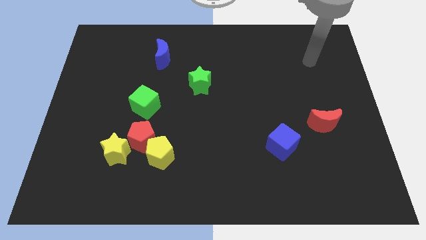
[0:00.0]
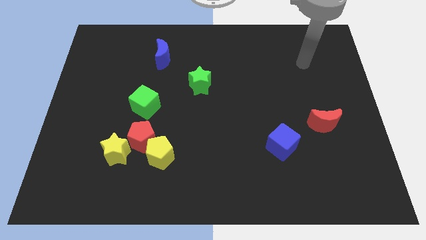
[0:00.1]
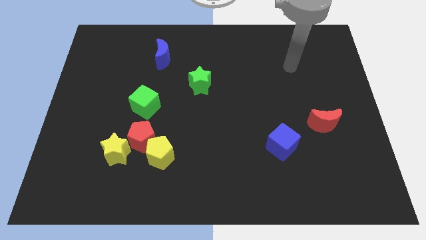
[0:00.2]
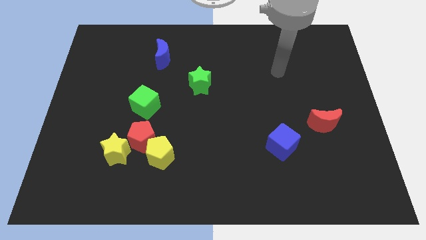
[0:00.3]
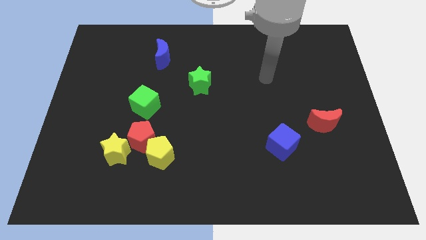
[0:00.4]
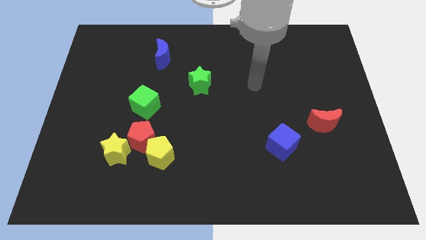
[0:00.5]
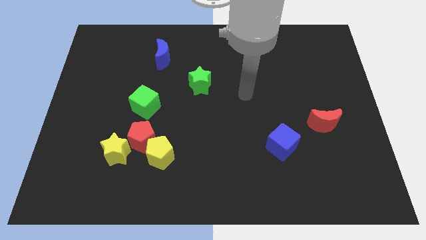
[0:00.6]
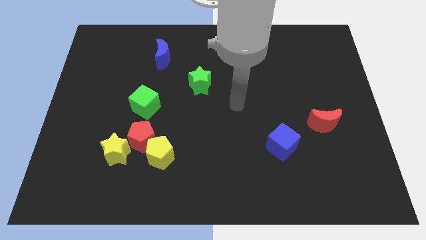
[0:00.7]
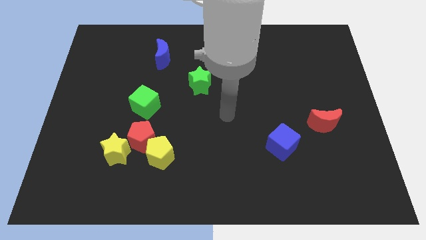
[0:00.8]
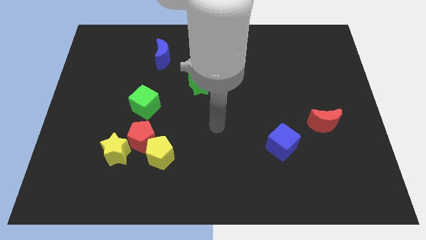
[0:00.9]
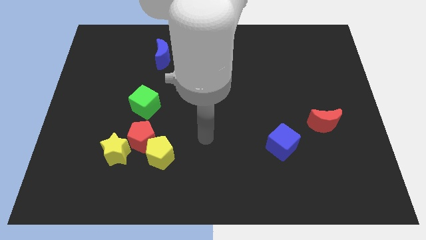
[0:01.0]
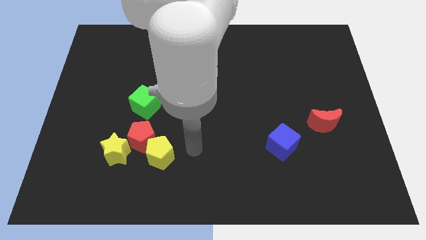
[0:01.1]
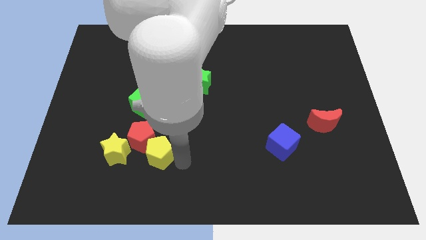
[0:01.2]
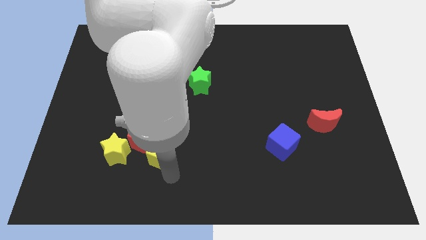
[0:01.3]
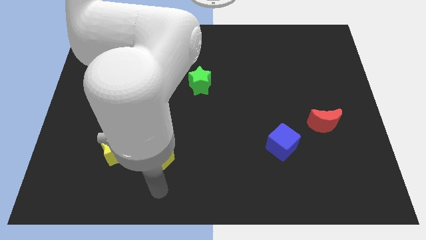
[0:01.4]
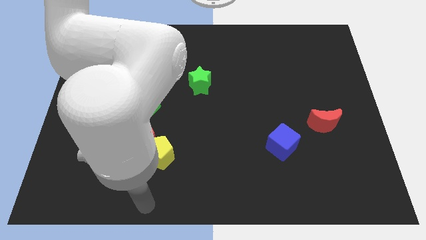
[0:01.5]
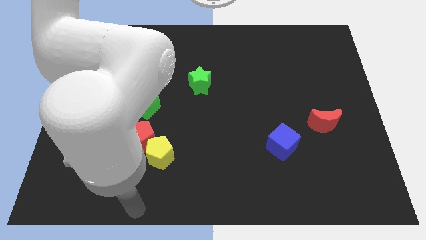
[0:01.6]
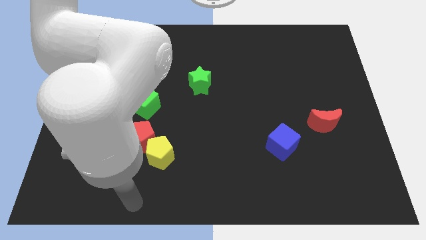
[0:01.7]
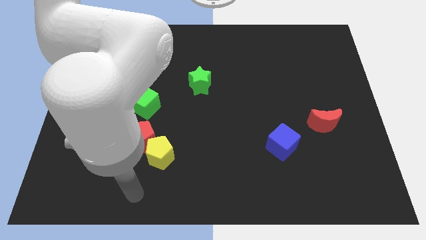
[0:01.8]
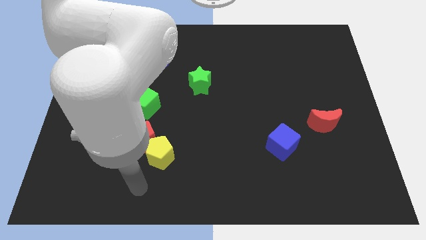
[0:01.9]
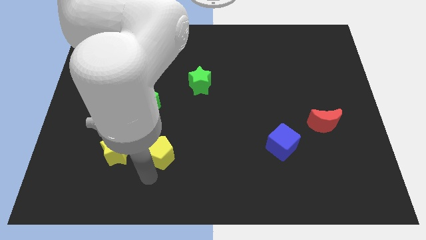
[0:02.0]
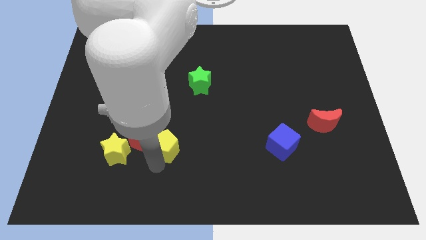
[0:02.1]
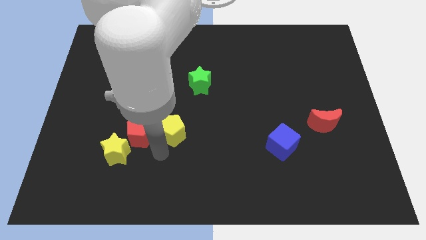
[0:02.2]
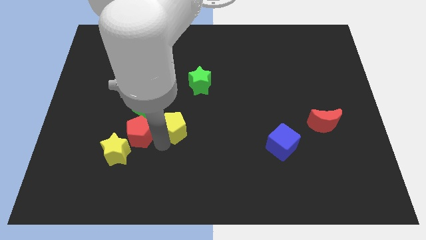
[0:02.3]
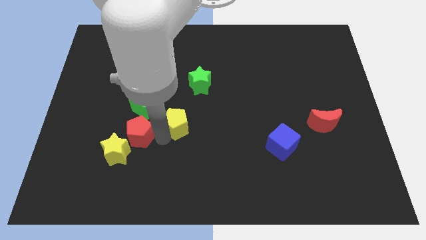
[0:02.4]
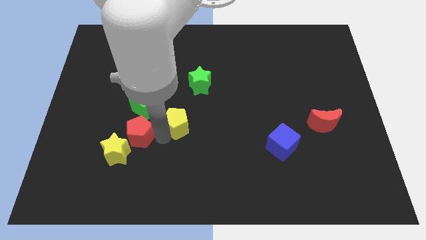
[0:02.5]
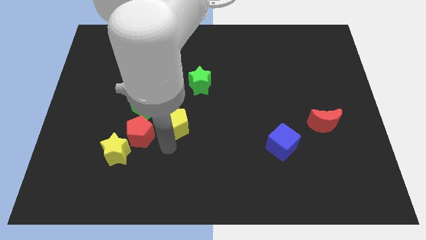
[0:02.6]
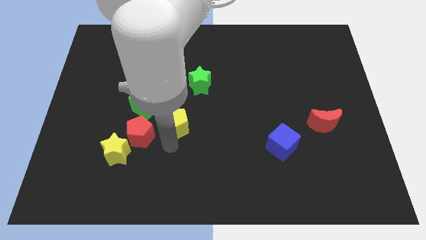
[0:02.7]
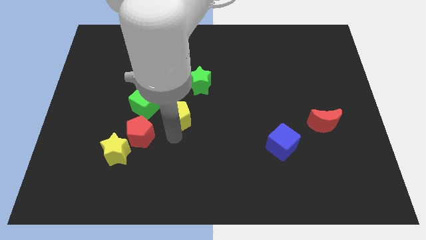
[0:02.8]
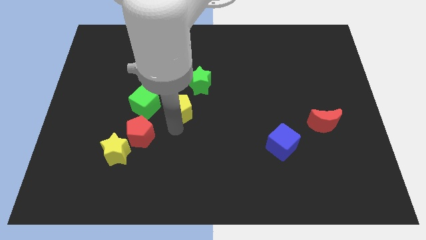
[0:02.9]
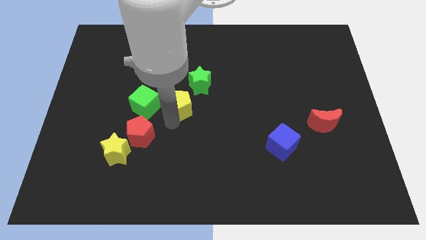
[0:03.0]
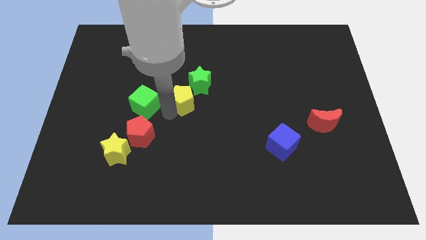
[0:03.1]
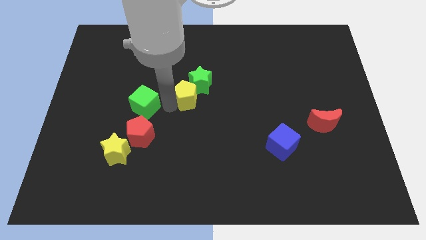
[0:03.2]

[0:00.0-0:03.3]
drag the yellow pentagon close to the green star

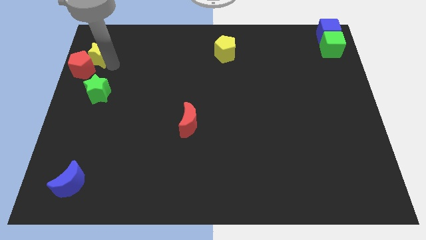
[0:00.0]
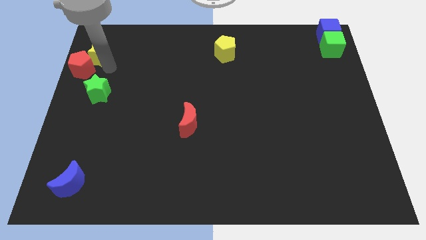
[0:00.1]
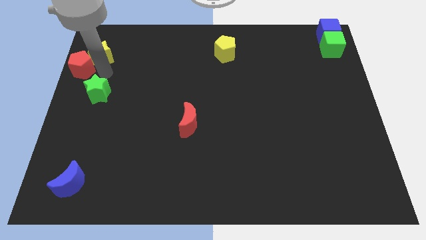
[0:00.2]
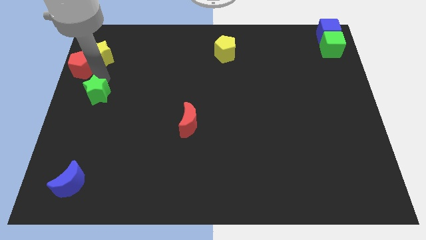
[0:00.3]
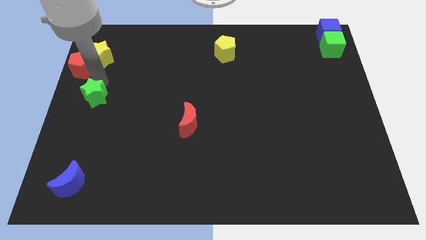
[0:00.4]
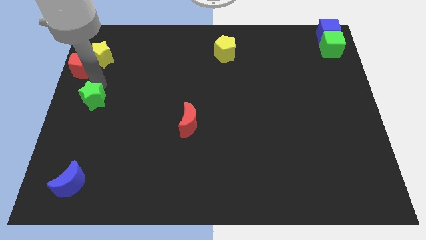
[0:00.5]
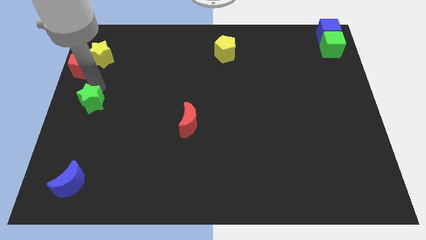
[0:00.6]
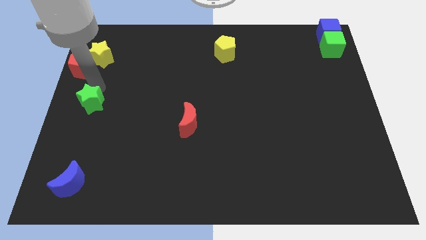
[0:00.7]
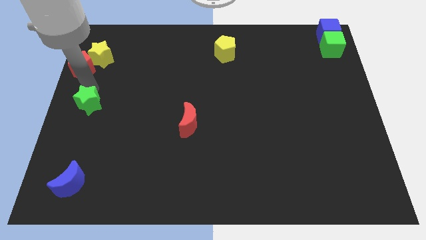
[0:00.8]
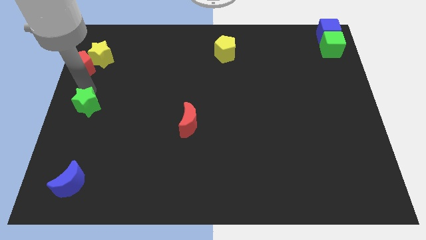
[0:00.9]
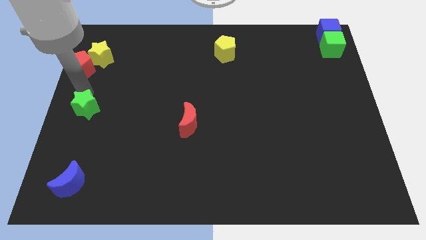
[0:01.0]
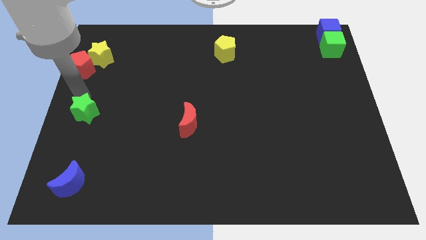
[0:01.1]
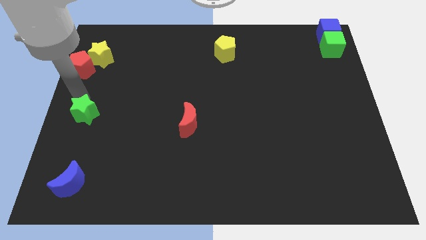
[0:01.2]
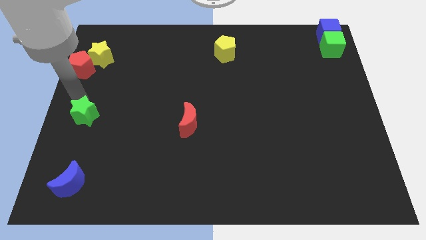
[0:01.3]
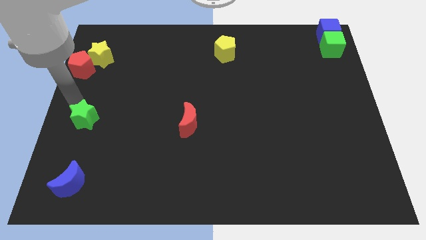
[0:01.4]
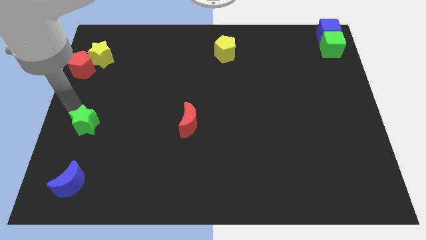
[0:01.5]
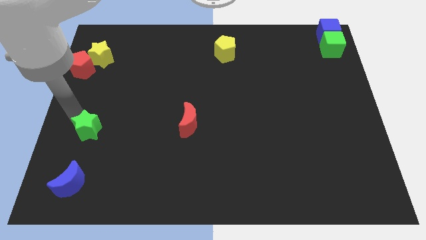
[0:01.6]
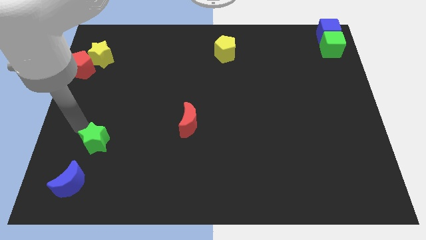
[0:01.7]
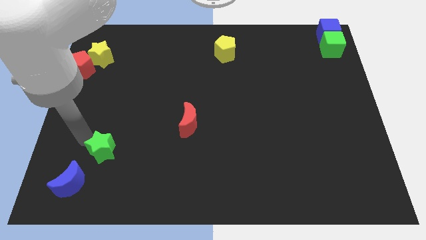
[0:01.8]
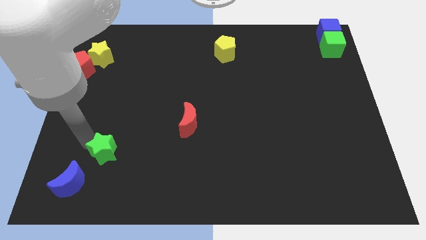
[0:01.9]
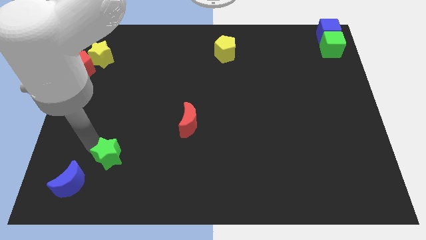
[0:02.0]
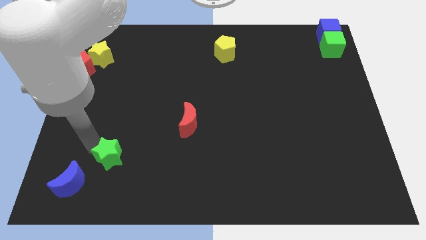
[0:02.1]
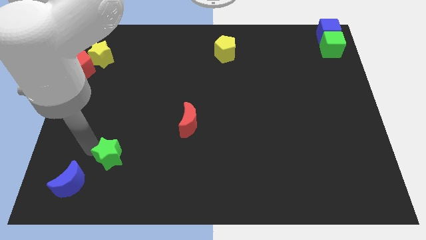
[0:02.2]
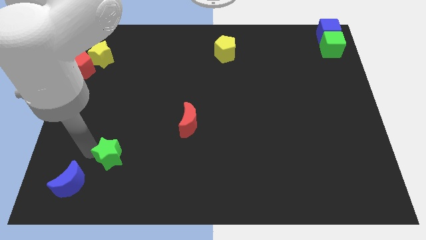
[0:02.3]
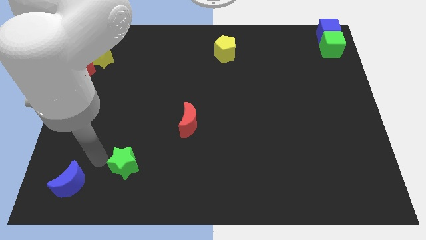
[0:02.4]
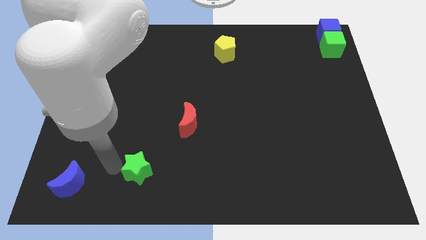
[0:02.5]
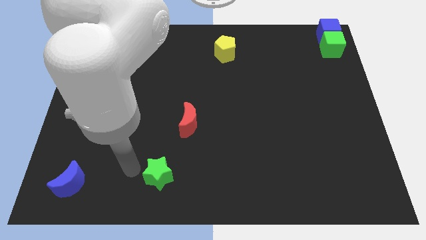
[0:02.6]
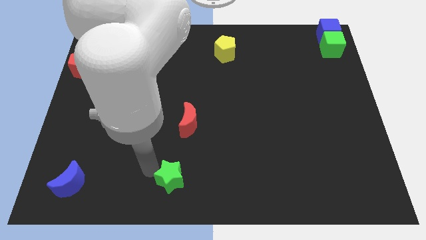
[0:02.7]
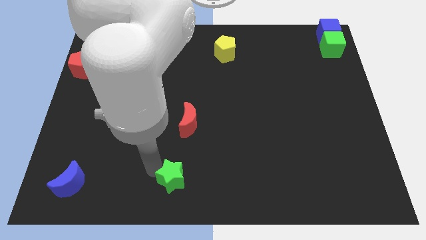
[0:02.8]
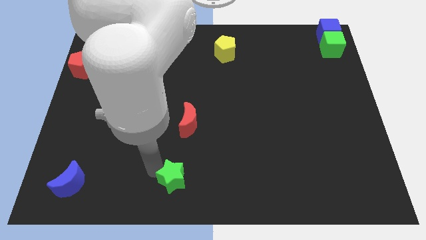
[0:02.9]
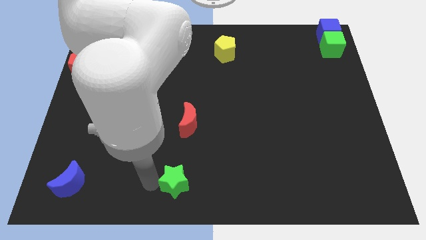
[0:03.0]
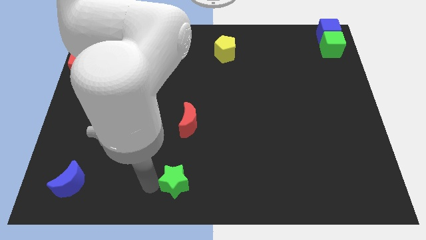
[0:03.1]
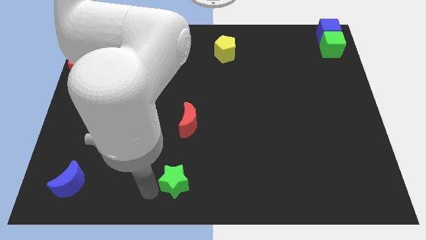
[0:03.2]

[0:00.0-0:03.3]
push the green star towards the bottom center

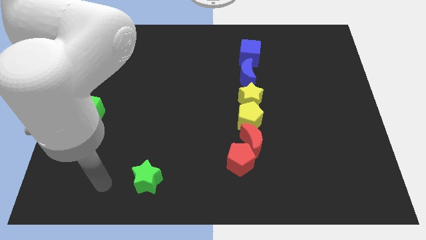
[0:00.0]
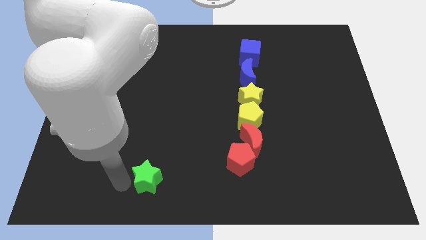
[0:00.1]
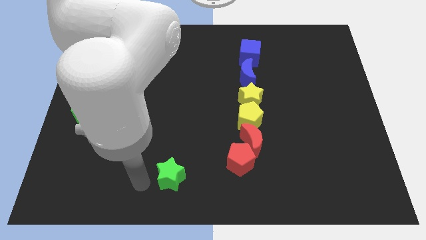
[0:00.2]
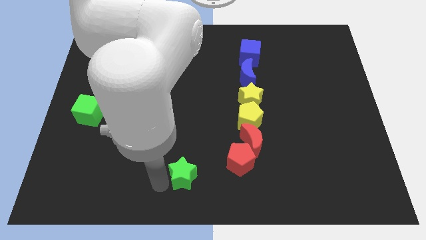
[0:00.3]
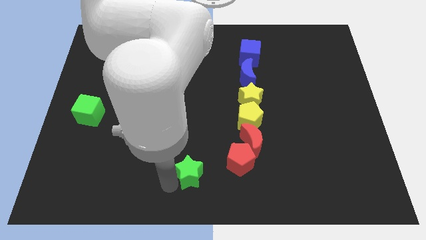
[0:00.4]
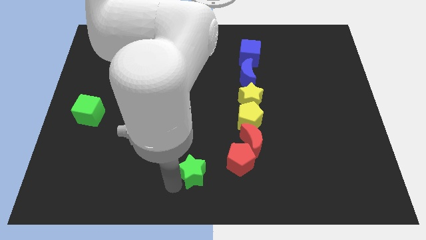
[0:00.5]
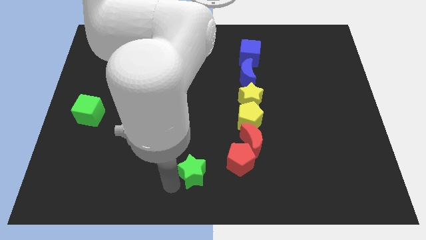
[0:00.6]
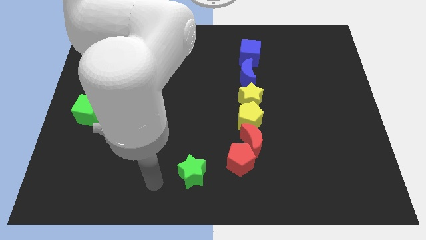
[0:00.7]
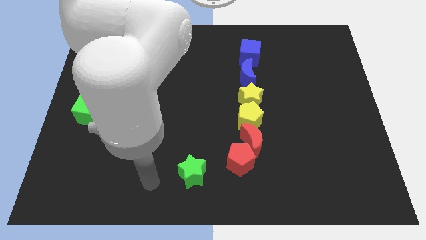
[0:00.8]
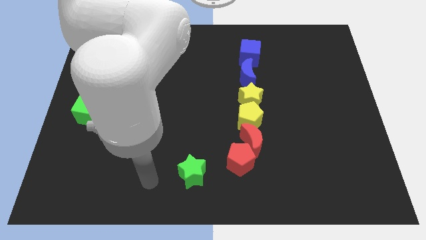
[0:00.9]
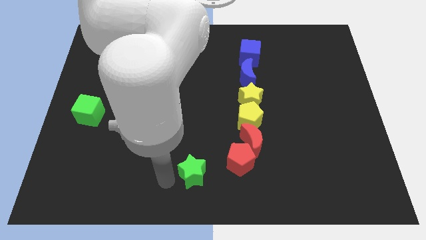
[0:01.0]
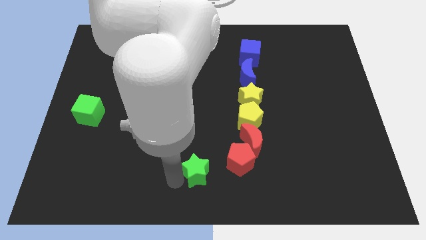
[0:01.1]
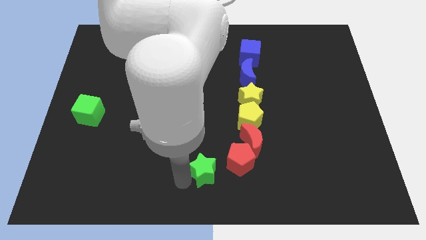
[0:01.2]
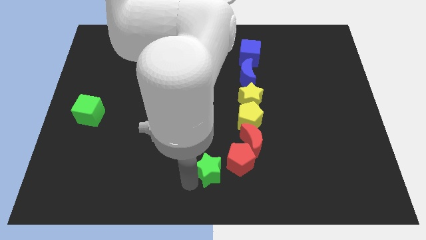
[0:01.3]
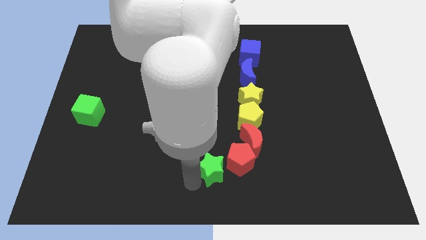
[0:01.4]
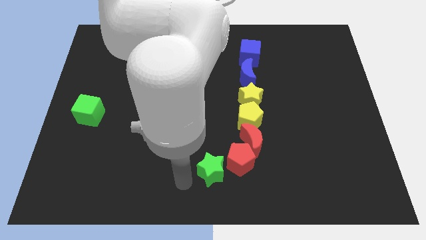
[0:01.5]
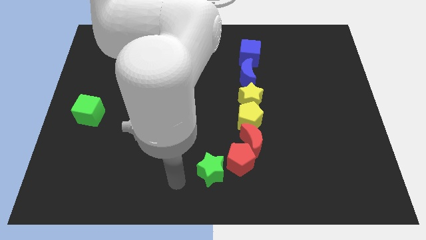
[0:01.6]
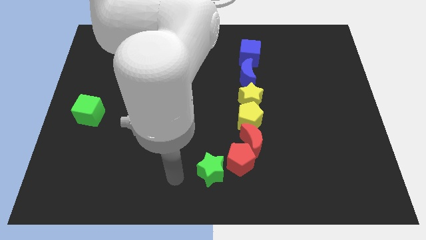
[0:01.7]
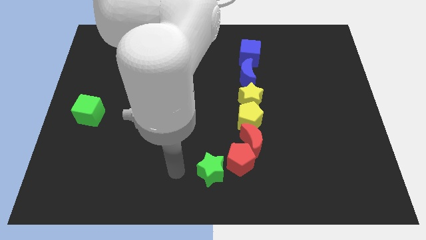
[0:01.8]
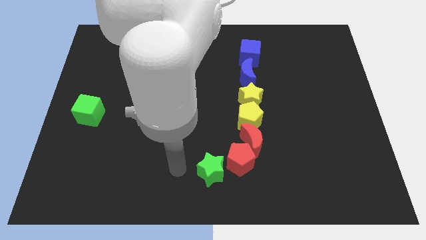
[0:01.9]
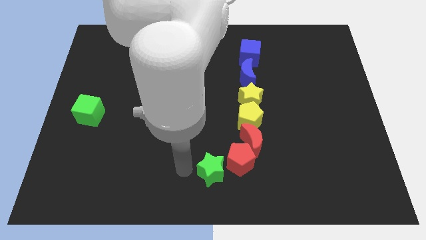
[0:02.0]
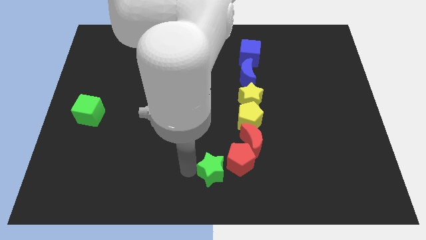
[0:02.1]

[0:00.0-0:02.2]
put the green star diagonally bottom left to red pentagon

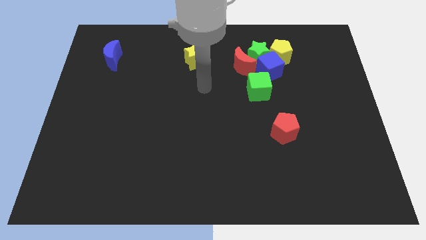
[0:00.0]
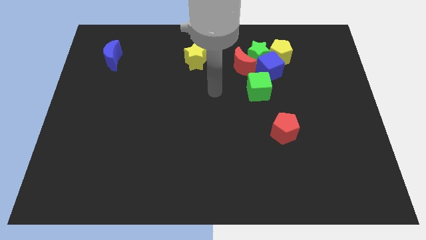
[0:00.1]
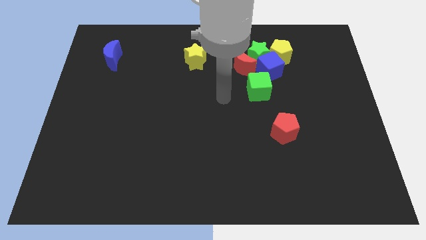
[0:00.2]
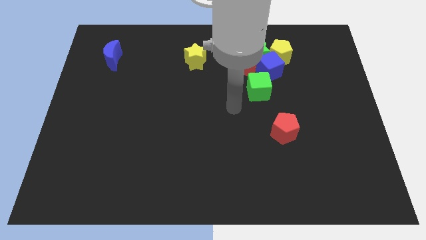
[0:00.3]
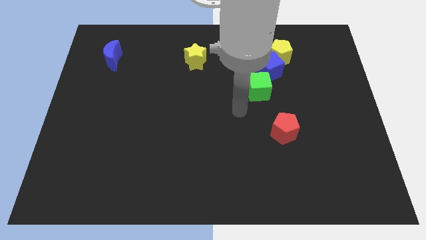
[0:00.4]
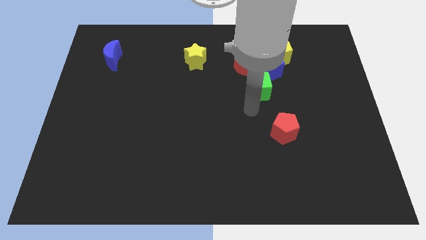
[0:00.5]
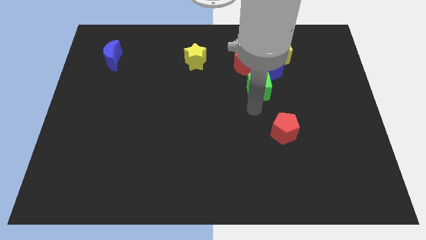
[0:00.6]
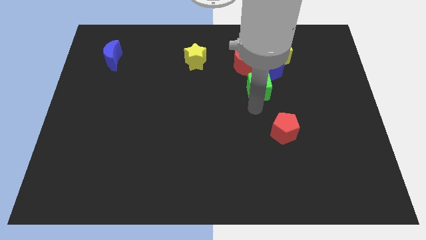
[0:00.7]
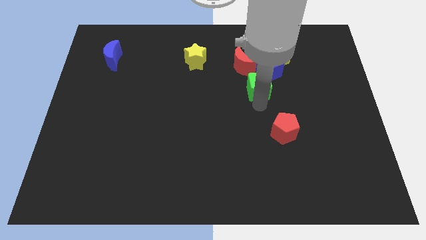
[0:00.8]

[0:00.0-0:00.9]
place your arm at the bottom of green cube
